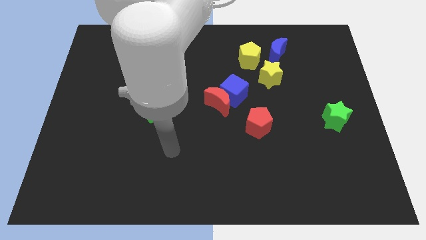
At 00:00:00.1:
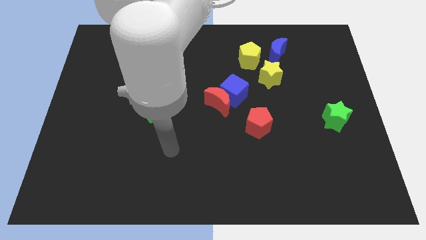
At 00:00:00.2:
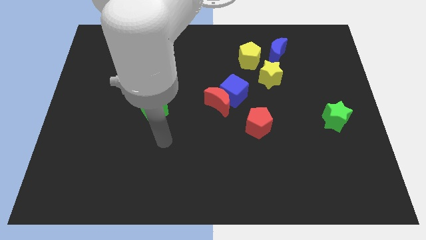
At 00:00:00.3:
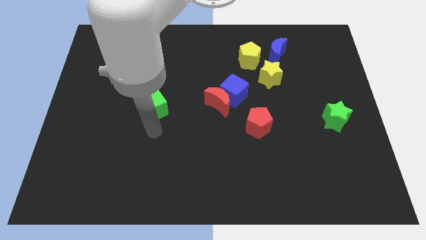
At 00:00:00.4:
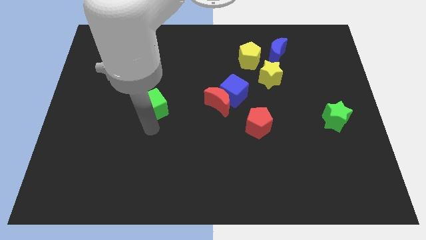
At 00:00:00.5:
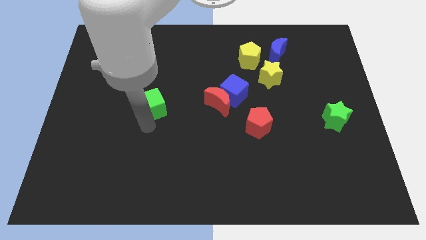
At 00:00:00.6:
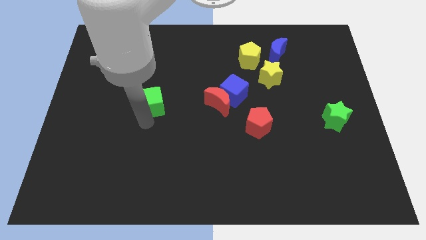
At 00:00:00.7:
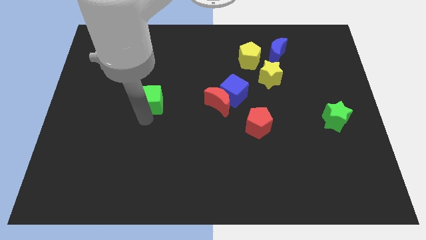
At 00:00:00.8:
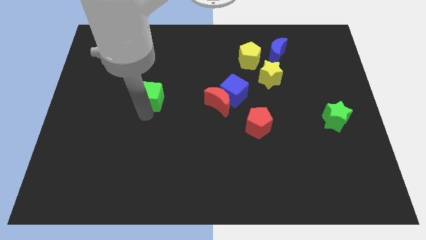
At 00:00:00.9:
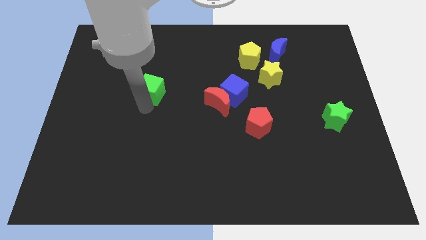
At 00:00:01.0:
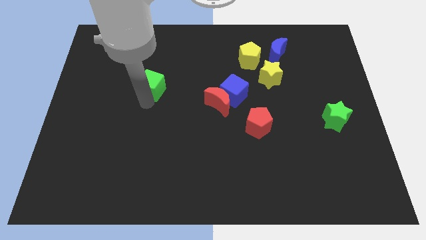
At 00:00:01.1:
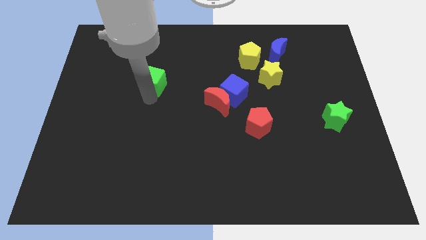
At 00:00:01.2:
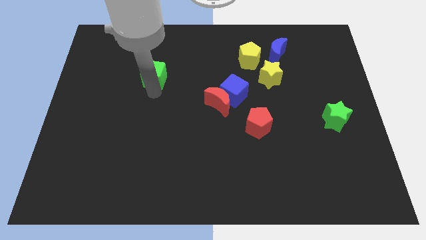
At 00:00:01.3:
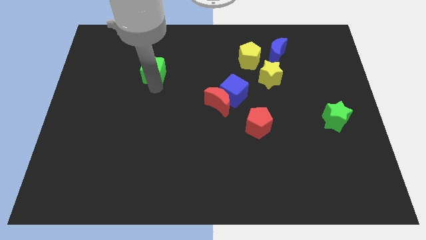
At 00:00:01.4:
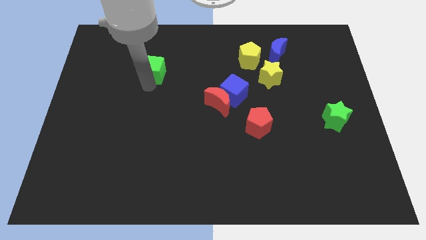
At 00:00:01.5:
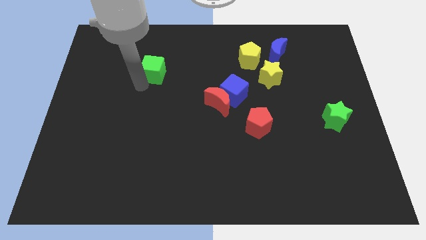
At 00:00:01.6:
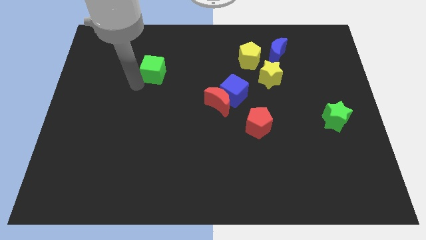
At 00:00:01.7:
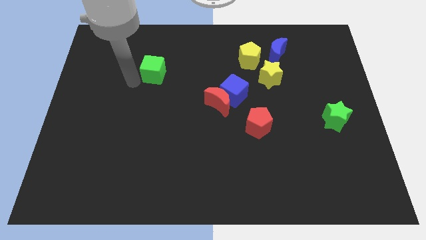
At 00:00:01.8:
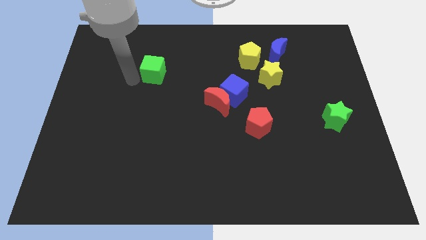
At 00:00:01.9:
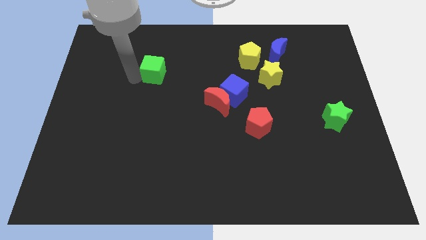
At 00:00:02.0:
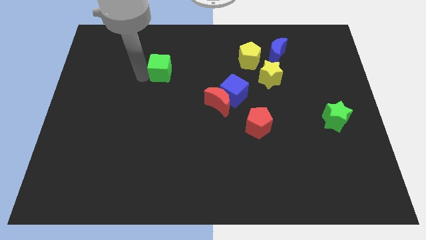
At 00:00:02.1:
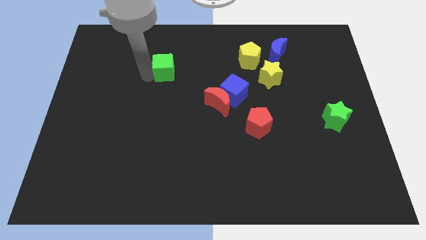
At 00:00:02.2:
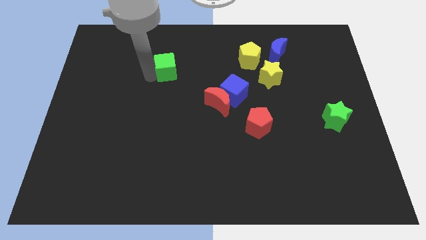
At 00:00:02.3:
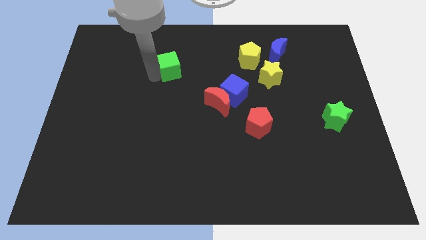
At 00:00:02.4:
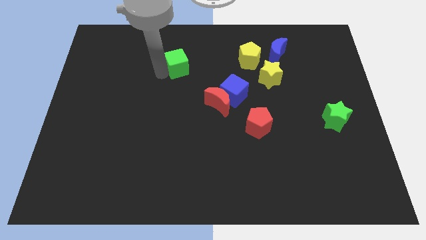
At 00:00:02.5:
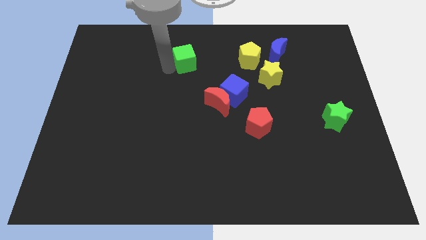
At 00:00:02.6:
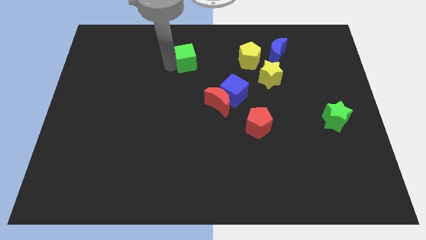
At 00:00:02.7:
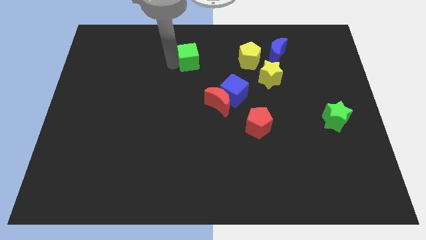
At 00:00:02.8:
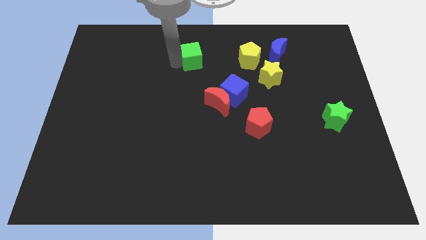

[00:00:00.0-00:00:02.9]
push the green cube to the horizontal left side of the yellow pentagon

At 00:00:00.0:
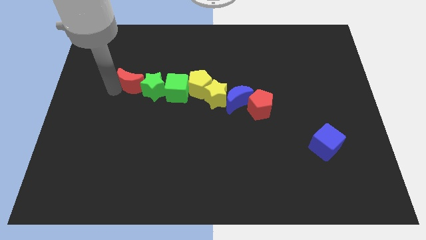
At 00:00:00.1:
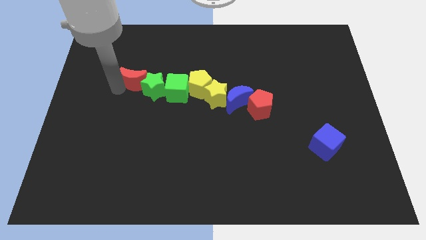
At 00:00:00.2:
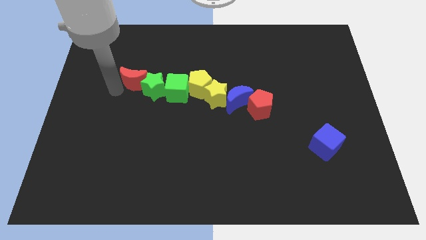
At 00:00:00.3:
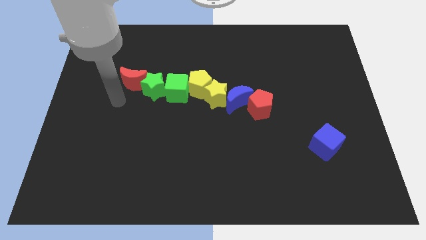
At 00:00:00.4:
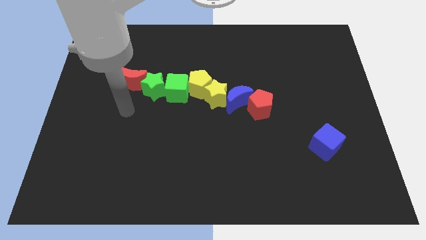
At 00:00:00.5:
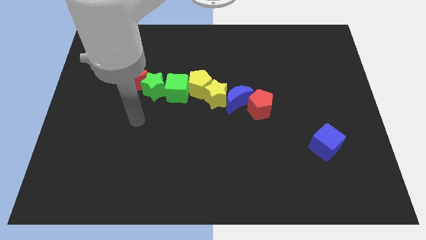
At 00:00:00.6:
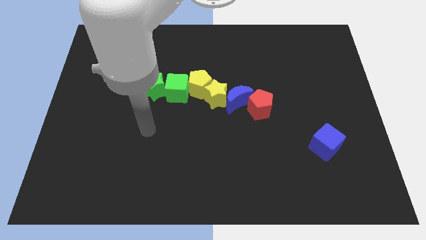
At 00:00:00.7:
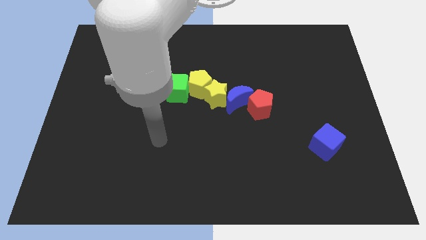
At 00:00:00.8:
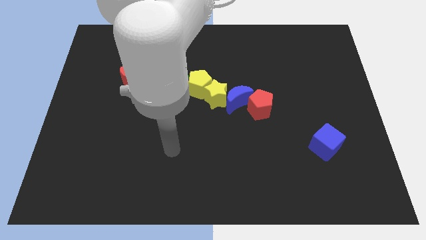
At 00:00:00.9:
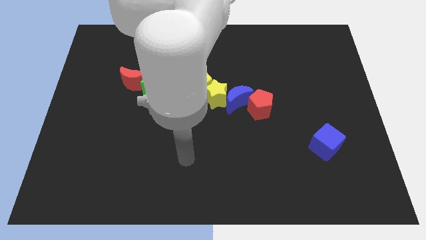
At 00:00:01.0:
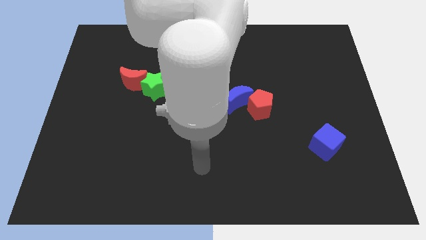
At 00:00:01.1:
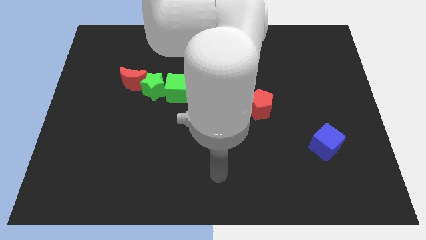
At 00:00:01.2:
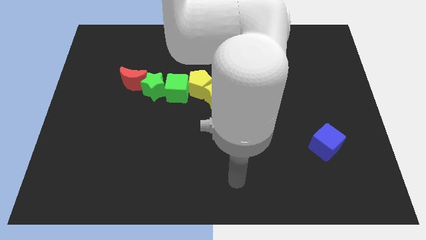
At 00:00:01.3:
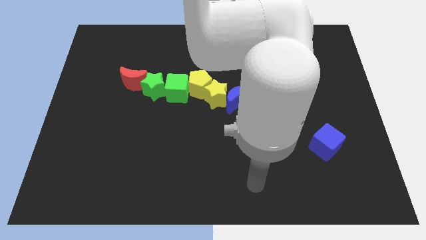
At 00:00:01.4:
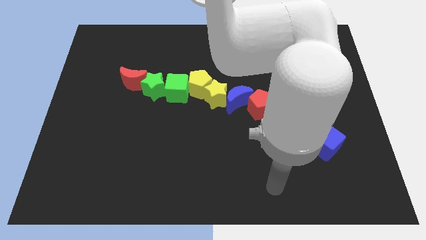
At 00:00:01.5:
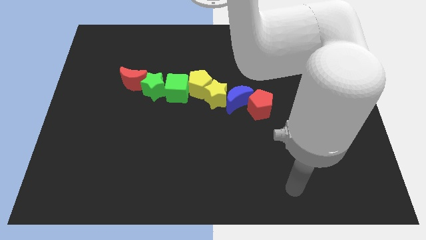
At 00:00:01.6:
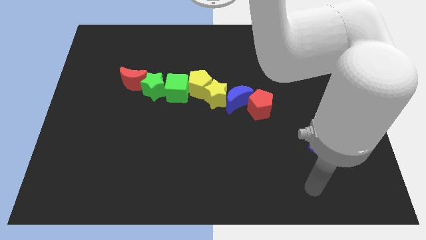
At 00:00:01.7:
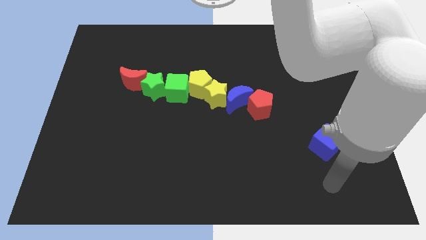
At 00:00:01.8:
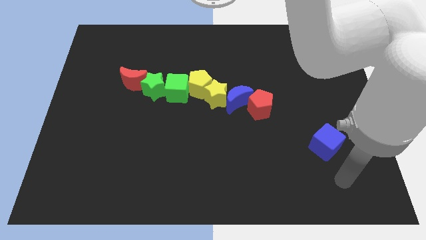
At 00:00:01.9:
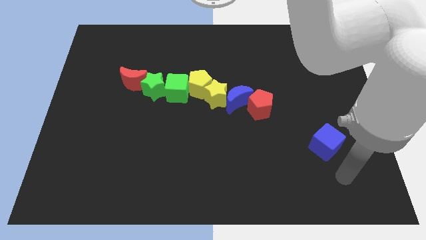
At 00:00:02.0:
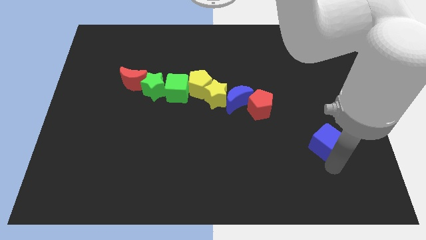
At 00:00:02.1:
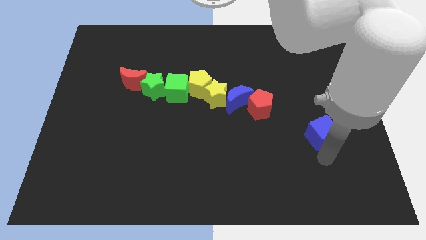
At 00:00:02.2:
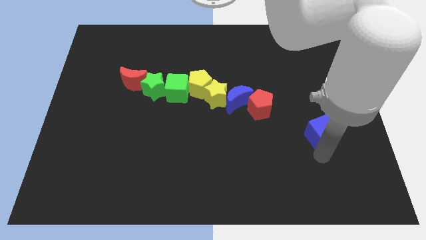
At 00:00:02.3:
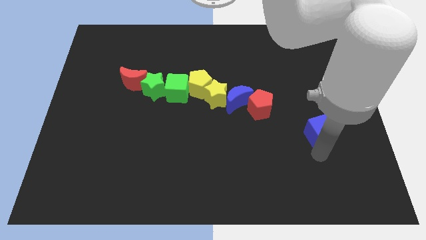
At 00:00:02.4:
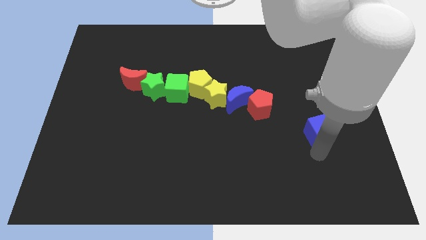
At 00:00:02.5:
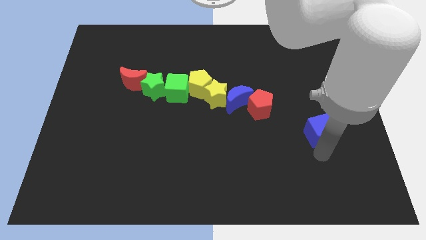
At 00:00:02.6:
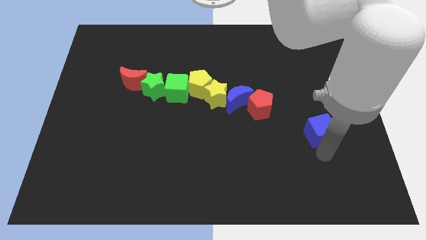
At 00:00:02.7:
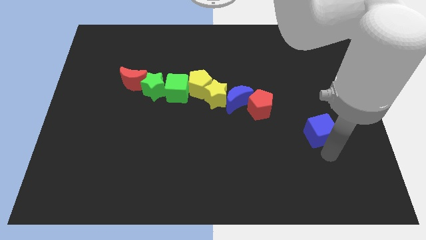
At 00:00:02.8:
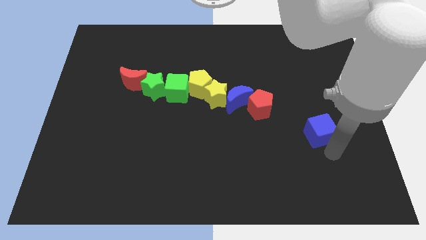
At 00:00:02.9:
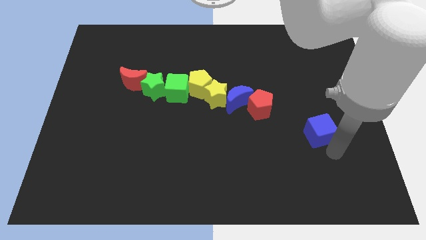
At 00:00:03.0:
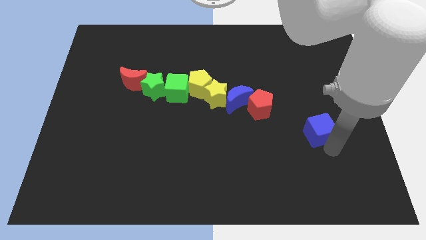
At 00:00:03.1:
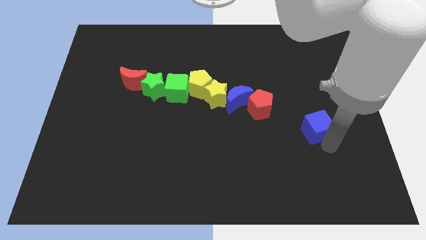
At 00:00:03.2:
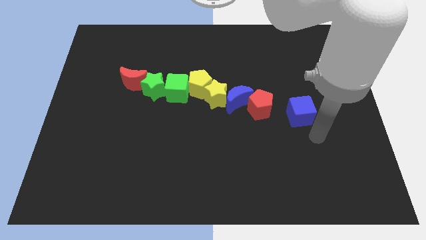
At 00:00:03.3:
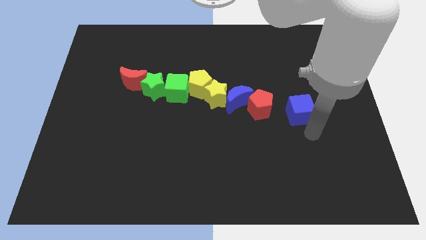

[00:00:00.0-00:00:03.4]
move the blue cube towards the right side of the red pentagon

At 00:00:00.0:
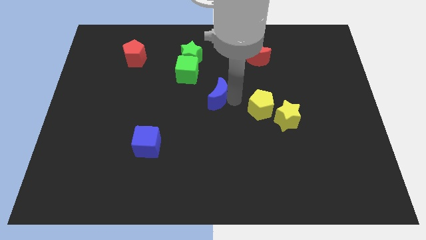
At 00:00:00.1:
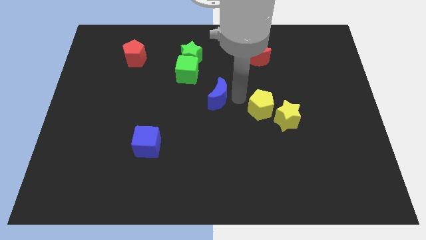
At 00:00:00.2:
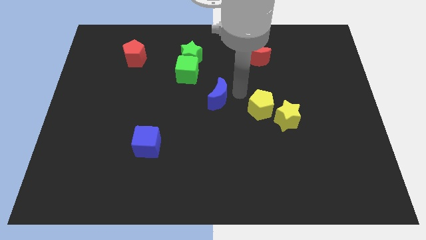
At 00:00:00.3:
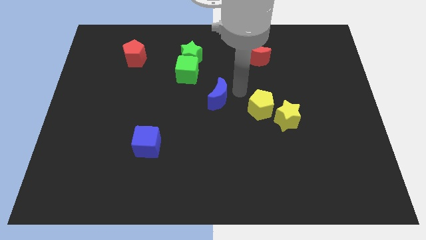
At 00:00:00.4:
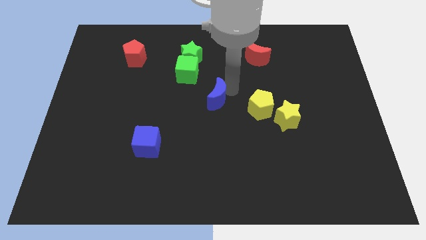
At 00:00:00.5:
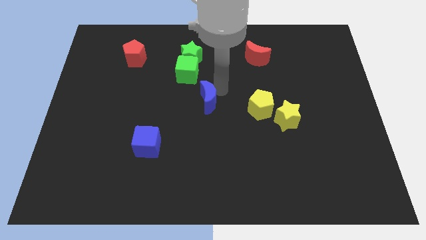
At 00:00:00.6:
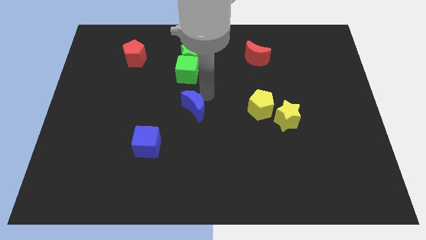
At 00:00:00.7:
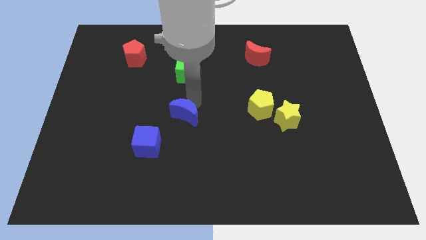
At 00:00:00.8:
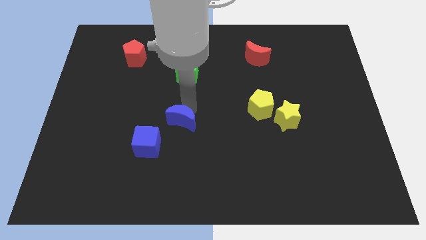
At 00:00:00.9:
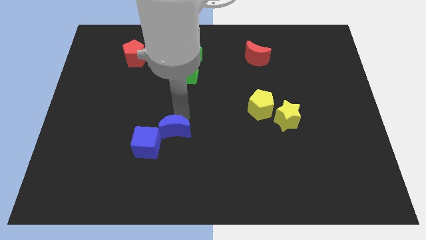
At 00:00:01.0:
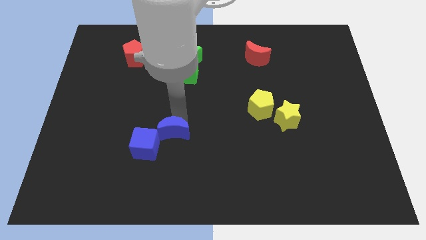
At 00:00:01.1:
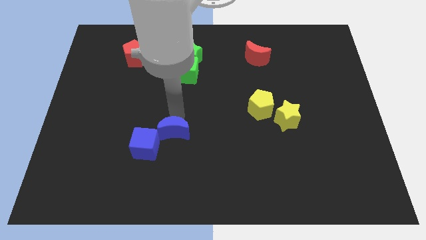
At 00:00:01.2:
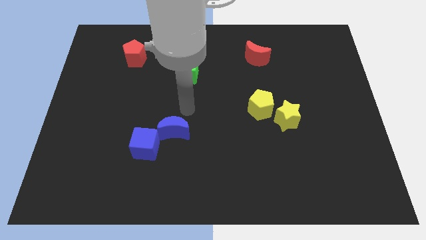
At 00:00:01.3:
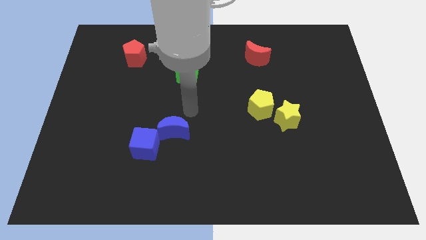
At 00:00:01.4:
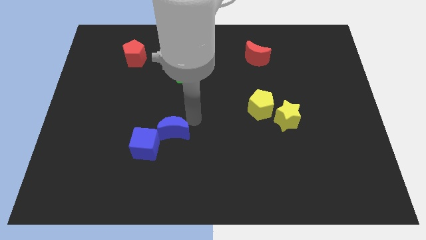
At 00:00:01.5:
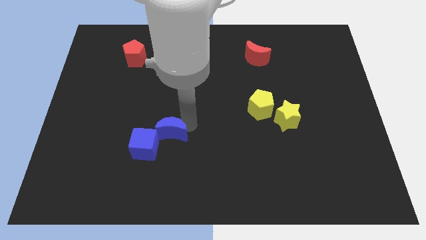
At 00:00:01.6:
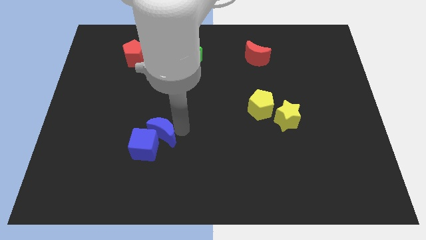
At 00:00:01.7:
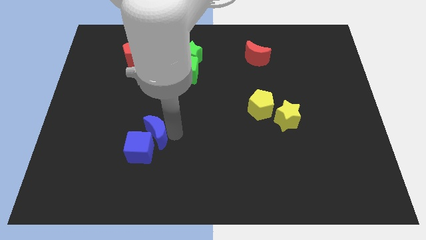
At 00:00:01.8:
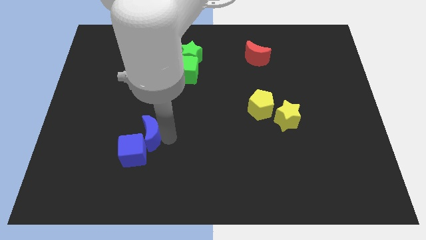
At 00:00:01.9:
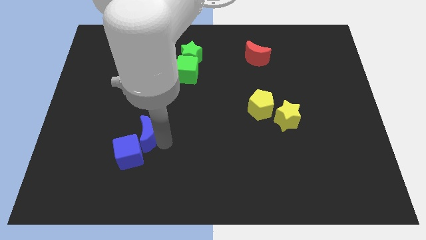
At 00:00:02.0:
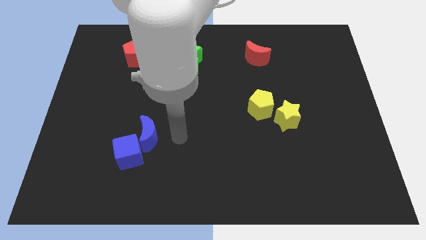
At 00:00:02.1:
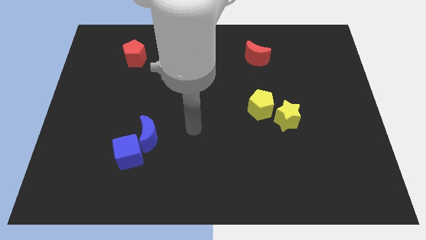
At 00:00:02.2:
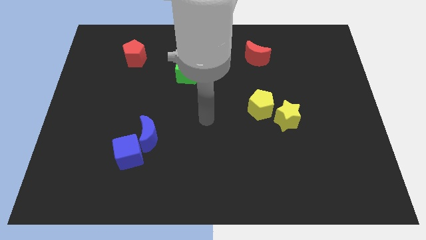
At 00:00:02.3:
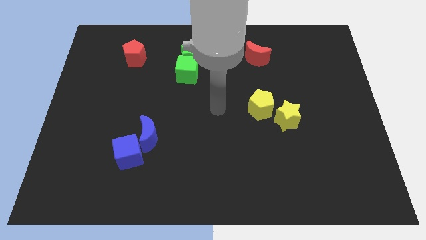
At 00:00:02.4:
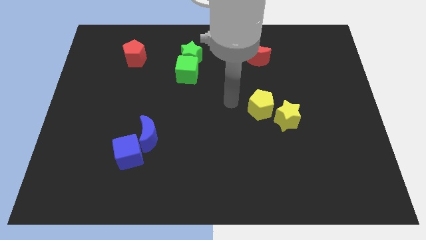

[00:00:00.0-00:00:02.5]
move the blue blocks towards the bottom left corner of the board

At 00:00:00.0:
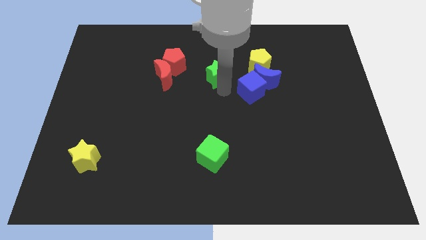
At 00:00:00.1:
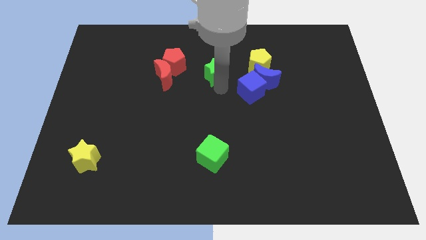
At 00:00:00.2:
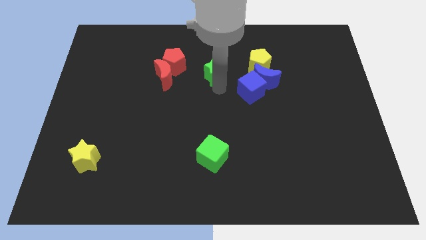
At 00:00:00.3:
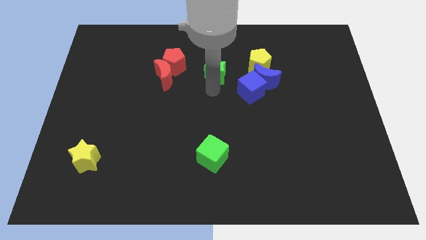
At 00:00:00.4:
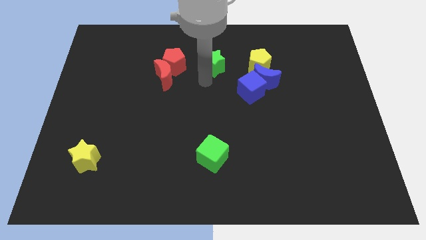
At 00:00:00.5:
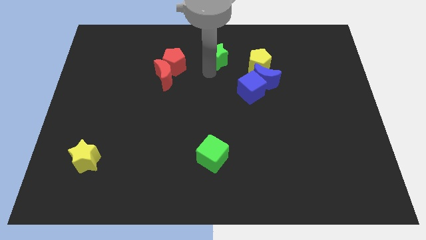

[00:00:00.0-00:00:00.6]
place the green star in between the red and yellow pentagons
